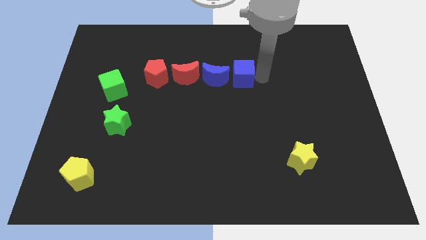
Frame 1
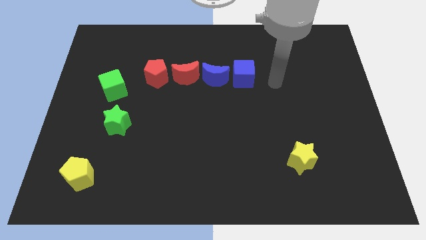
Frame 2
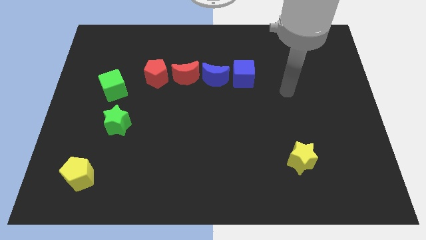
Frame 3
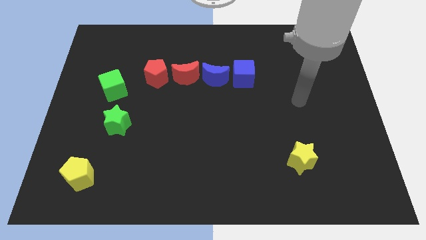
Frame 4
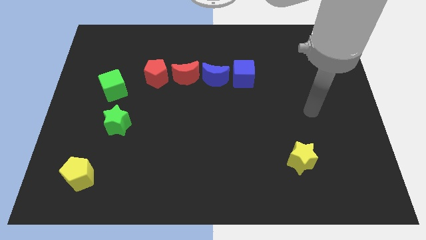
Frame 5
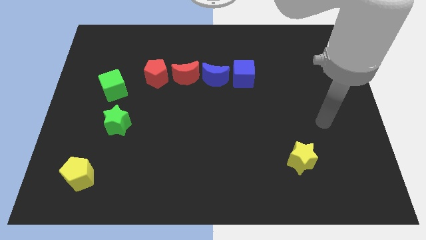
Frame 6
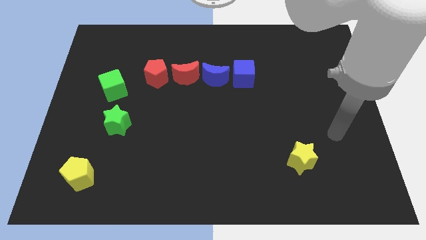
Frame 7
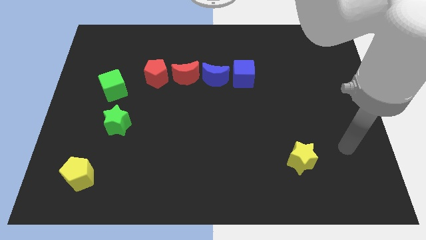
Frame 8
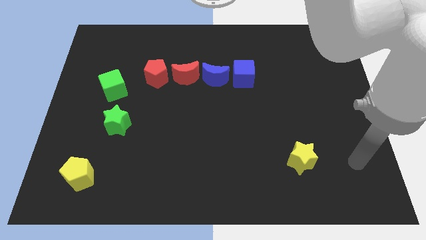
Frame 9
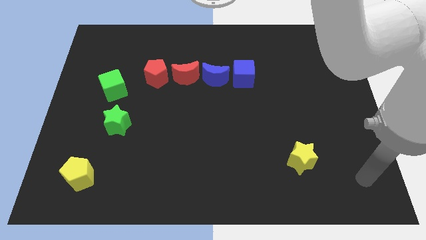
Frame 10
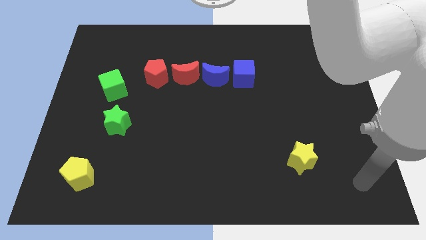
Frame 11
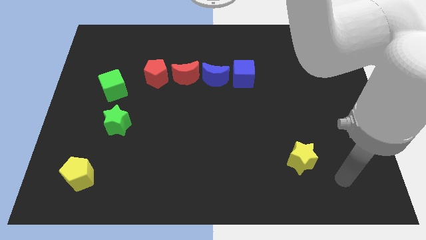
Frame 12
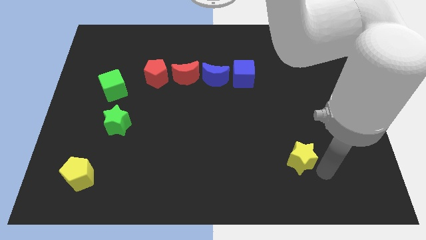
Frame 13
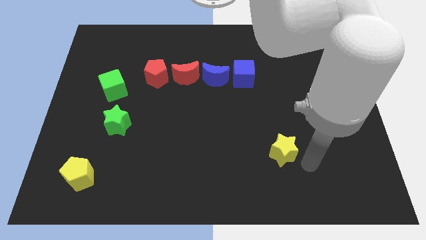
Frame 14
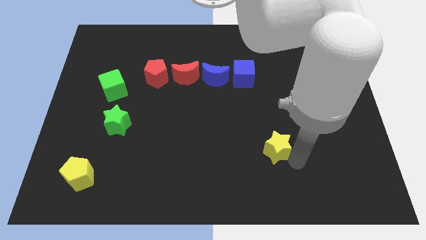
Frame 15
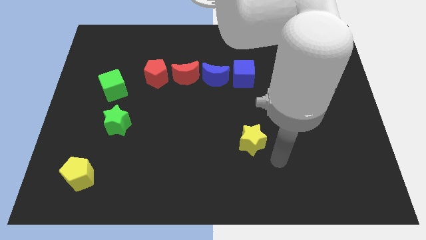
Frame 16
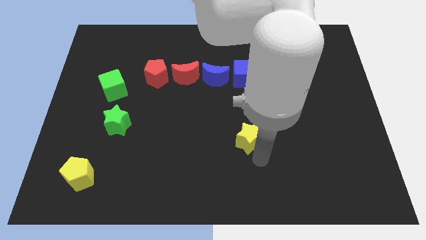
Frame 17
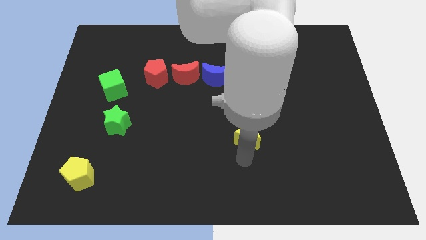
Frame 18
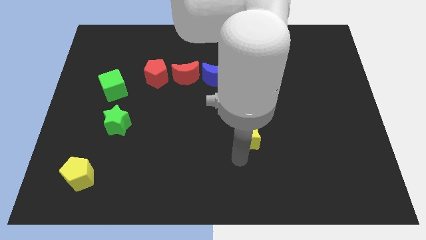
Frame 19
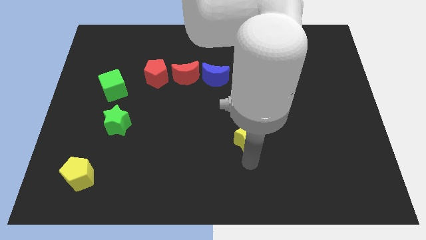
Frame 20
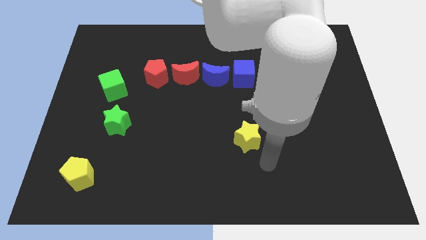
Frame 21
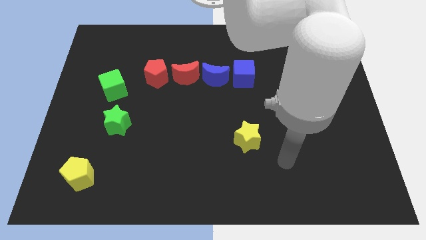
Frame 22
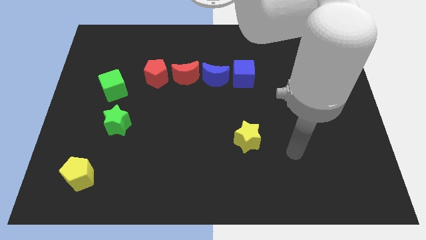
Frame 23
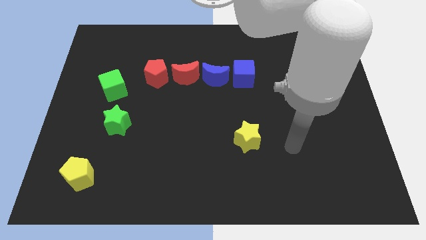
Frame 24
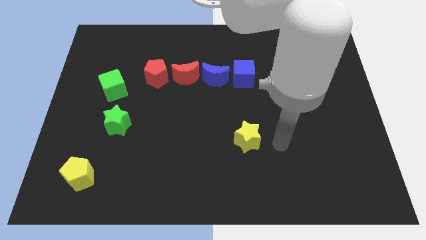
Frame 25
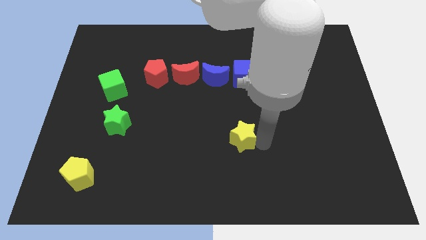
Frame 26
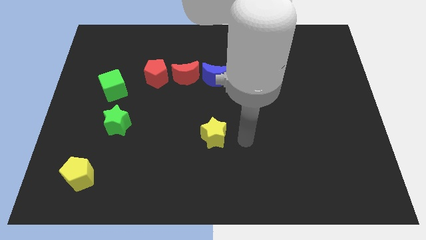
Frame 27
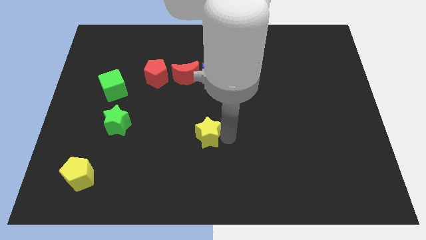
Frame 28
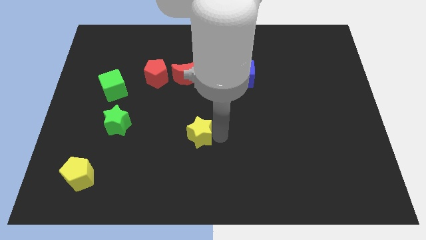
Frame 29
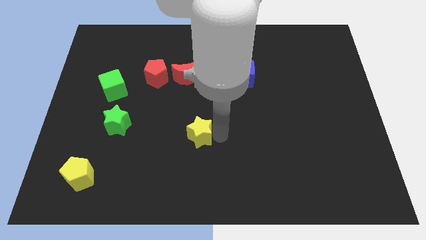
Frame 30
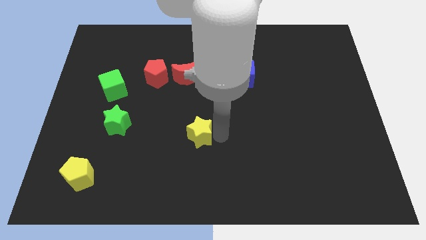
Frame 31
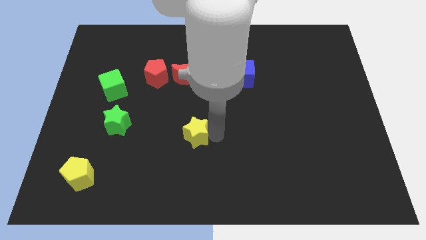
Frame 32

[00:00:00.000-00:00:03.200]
move the yellow star to the green star

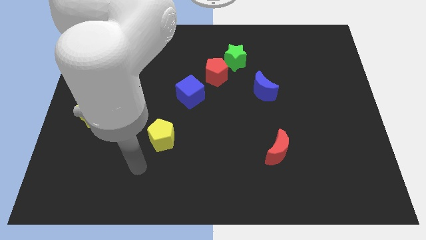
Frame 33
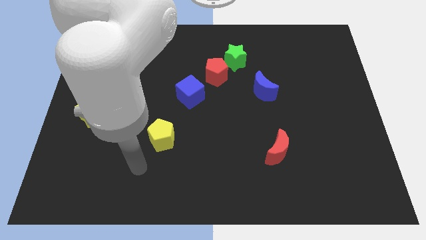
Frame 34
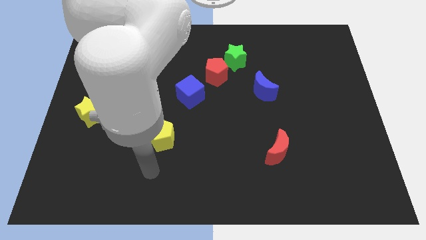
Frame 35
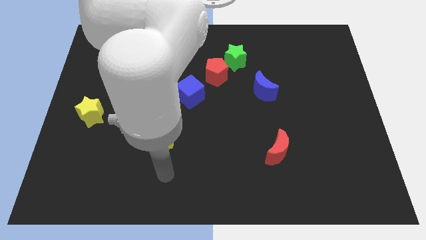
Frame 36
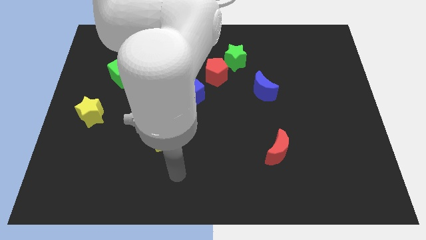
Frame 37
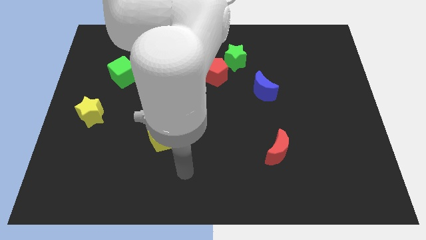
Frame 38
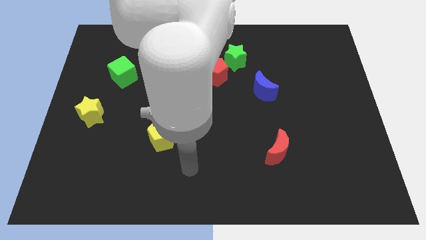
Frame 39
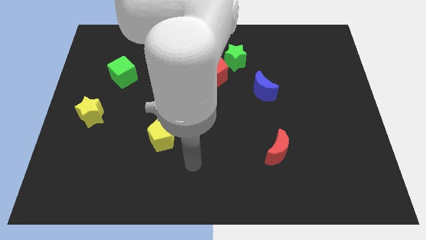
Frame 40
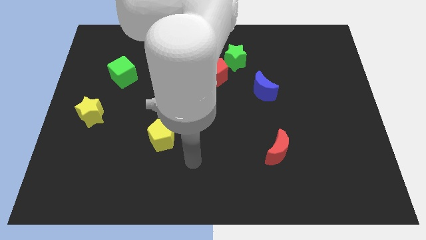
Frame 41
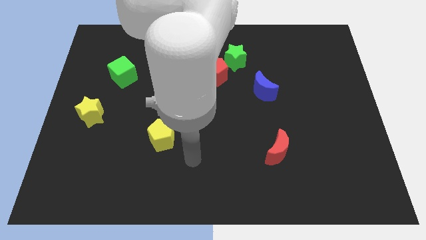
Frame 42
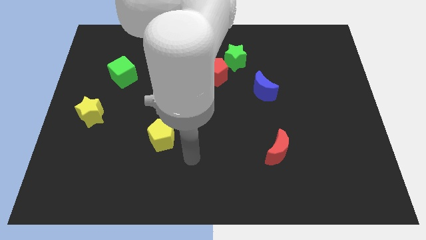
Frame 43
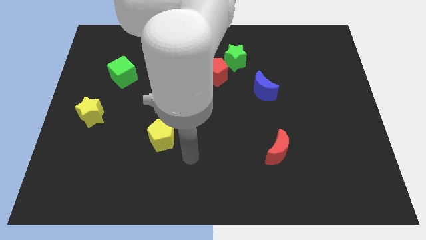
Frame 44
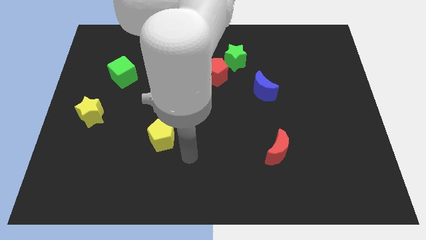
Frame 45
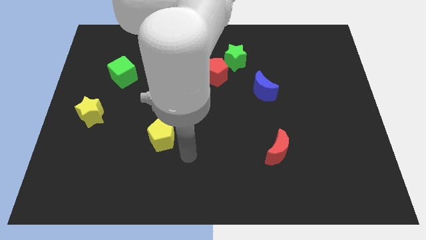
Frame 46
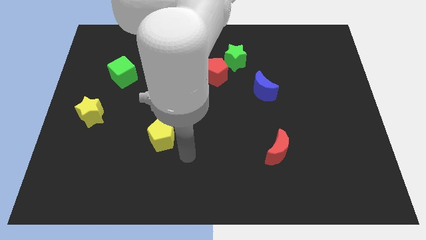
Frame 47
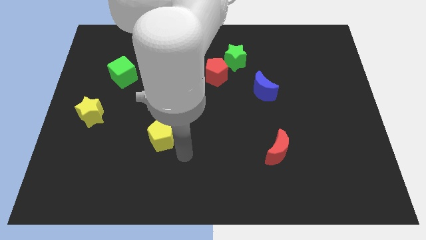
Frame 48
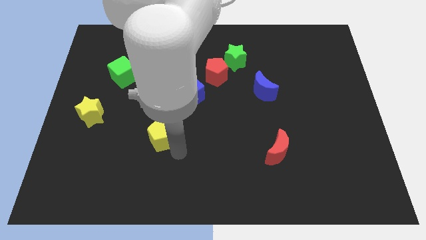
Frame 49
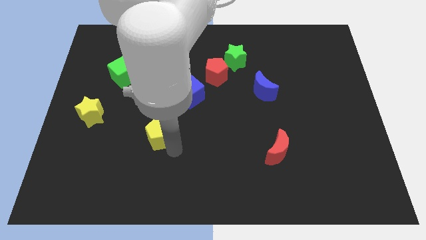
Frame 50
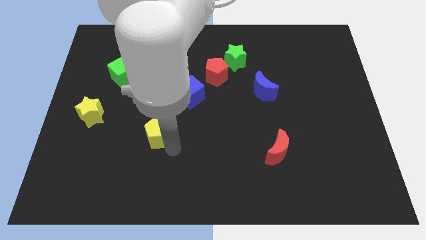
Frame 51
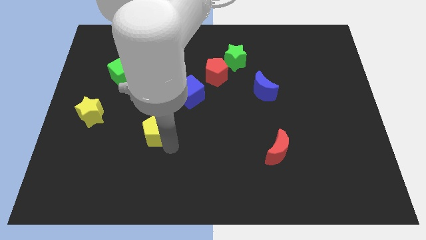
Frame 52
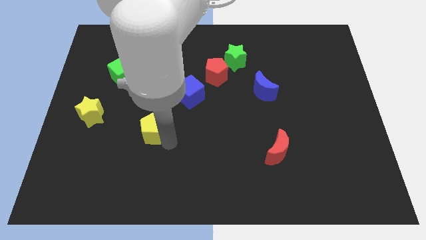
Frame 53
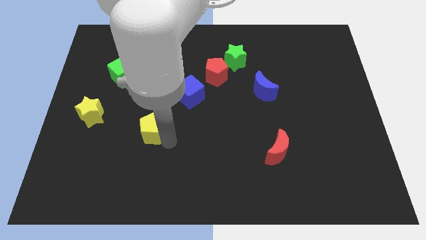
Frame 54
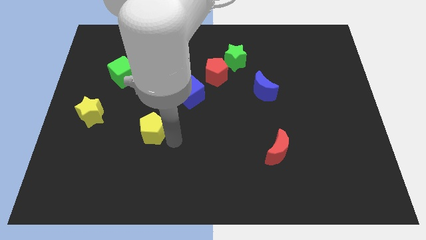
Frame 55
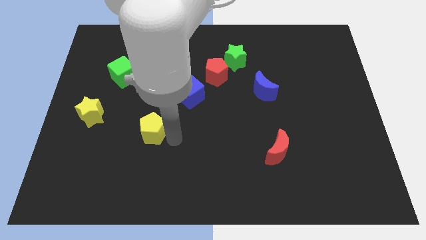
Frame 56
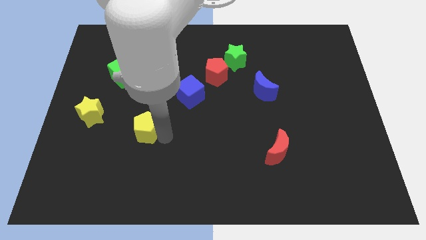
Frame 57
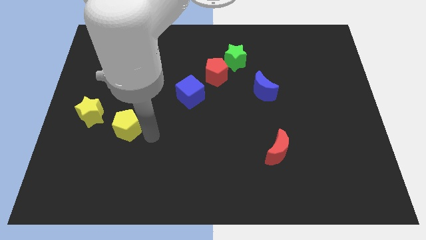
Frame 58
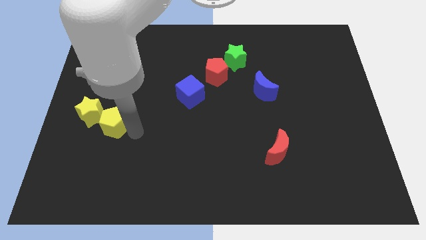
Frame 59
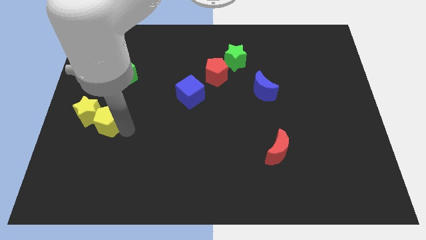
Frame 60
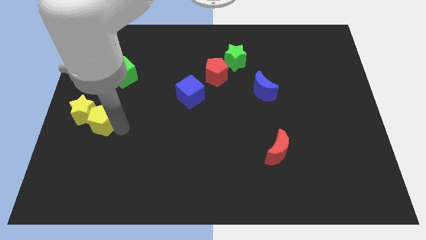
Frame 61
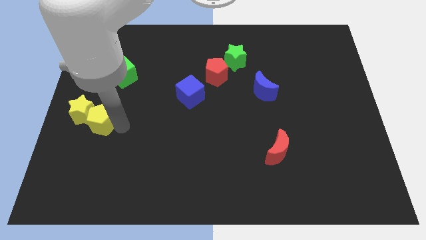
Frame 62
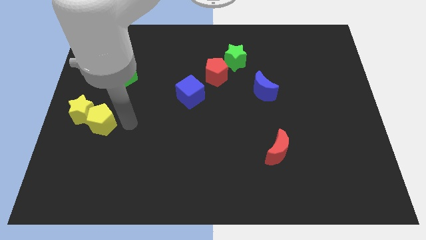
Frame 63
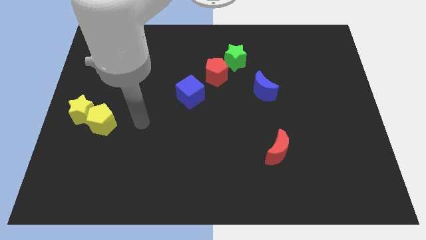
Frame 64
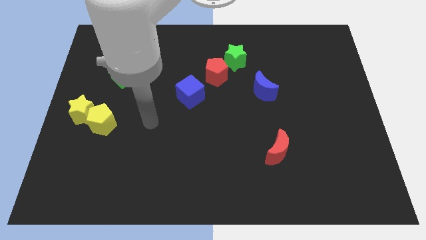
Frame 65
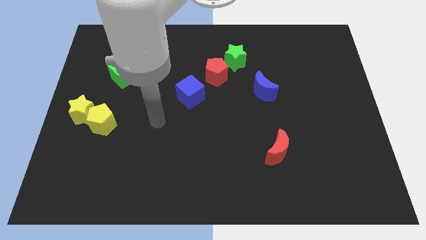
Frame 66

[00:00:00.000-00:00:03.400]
push the yellow blocks towards the center left side of the board

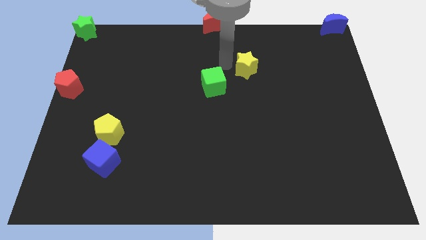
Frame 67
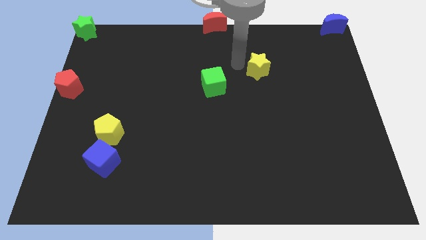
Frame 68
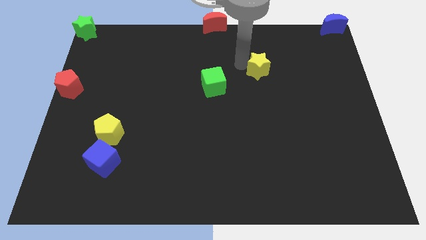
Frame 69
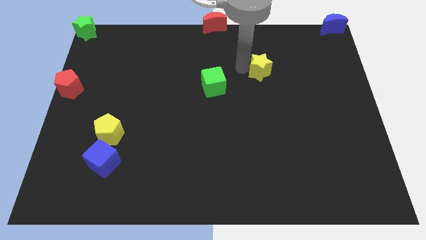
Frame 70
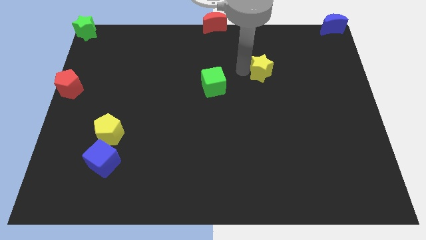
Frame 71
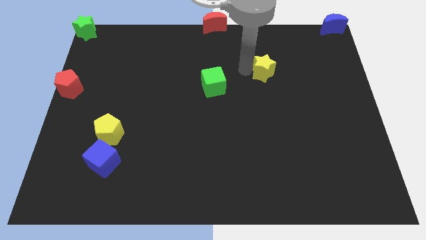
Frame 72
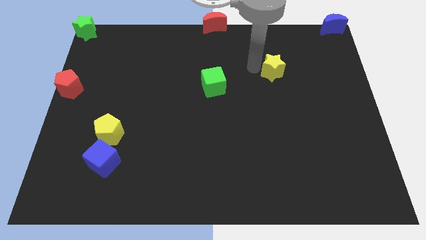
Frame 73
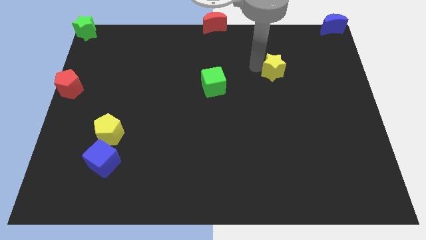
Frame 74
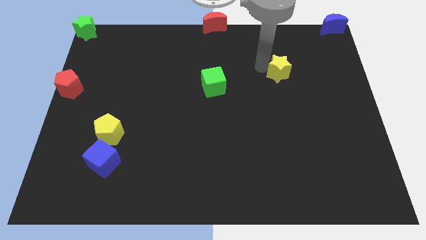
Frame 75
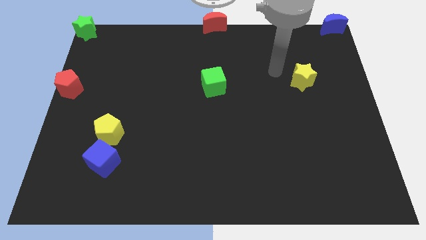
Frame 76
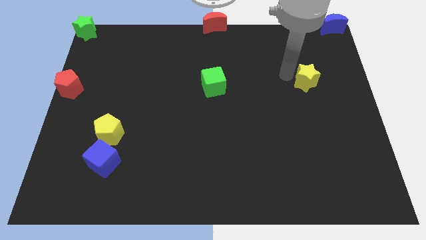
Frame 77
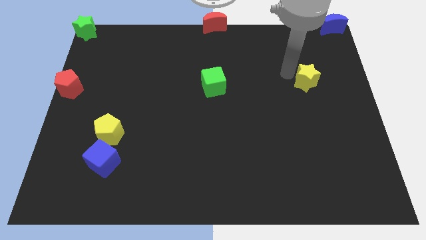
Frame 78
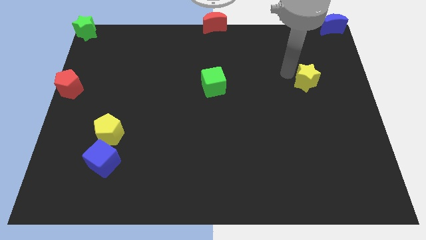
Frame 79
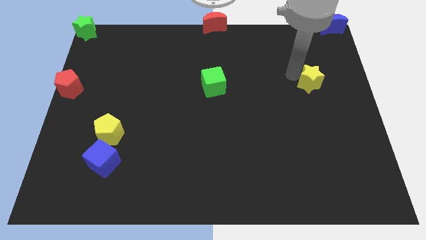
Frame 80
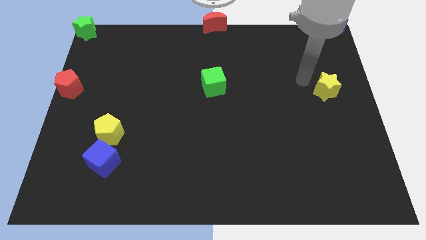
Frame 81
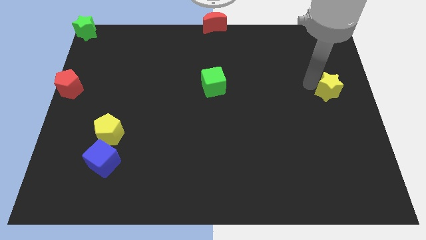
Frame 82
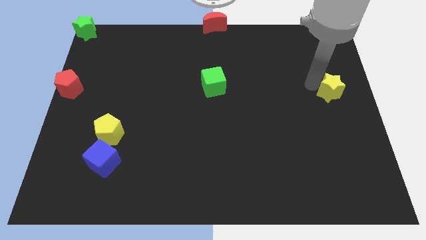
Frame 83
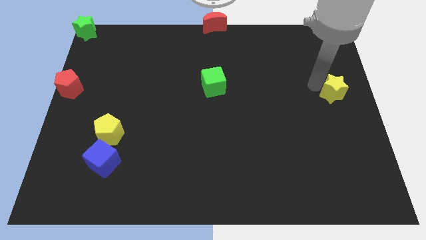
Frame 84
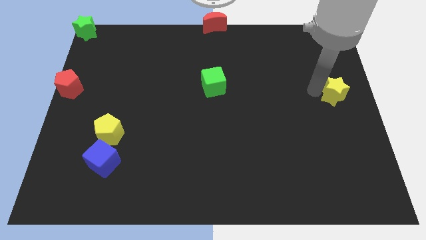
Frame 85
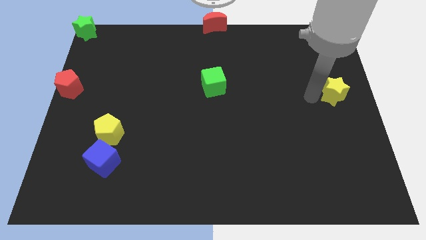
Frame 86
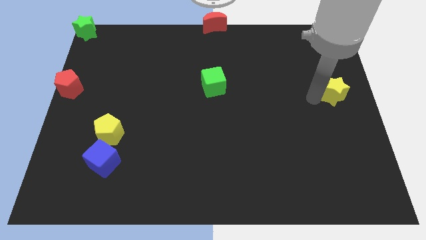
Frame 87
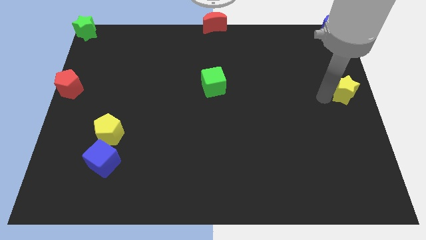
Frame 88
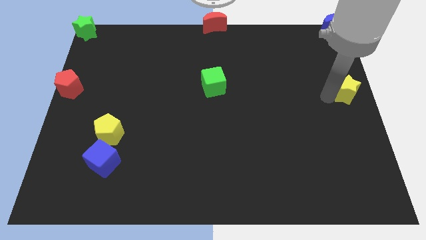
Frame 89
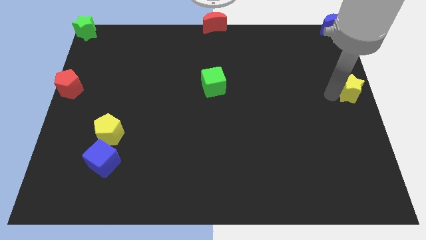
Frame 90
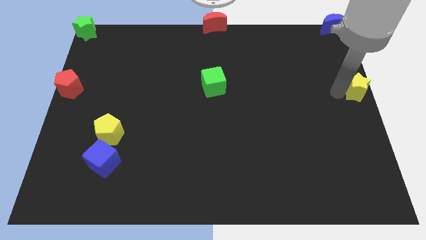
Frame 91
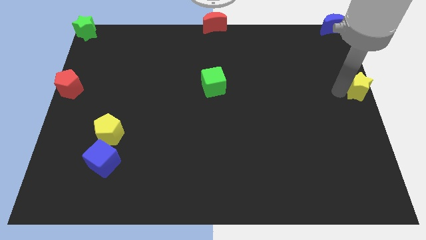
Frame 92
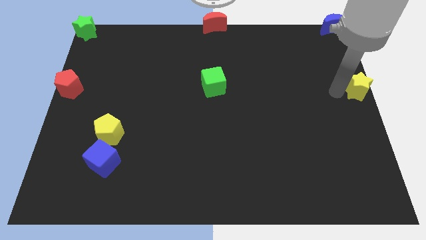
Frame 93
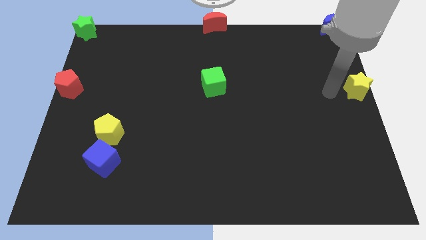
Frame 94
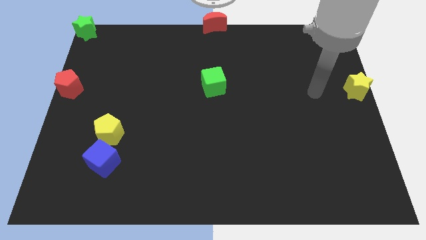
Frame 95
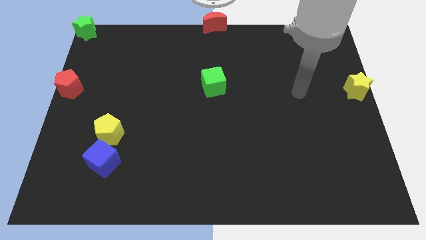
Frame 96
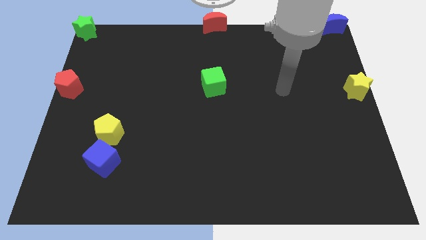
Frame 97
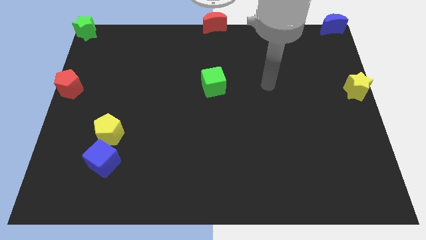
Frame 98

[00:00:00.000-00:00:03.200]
move the yellow star on the center right corner of the board
